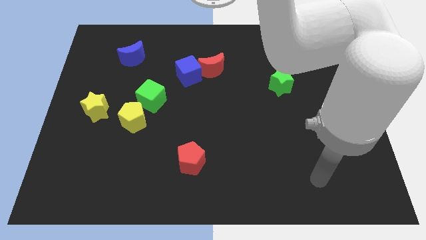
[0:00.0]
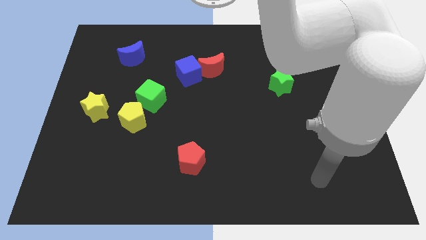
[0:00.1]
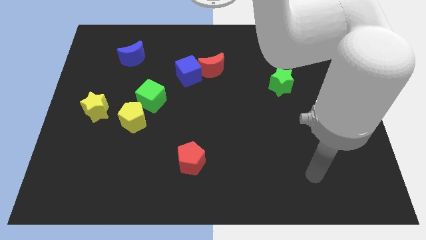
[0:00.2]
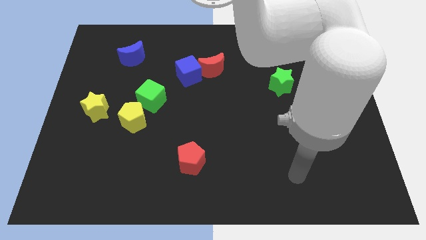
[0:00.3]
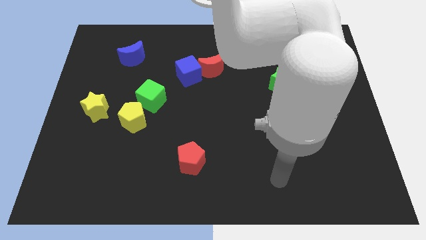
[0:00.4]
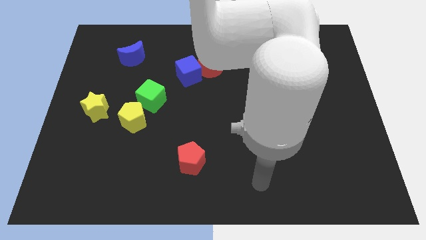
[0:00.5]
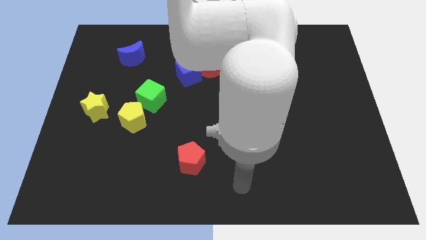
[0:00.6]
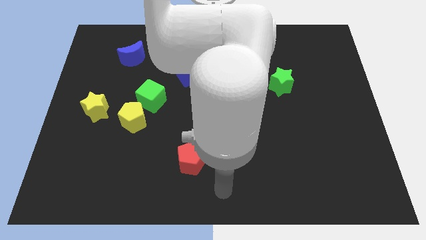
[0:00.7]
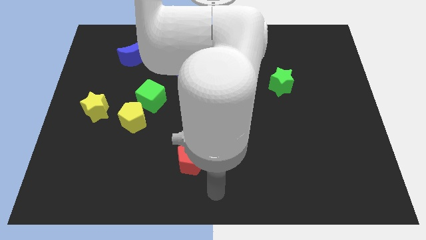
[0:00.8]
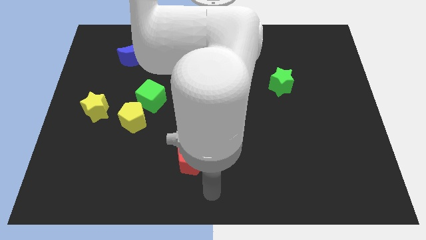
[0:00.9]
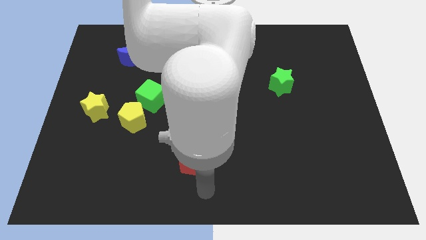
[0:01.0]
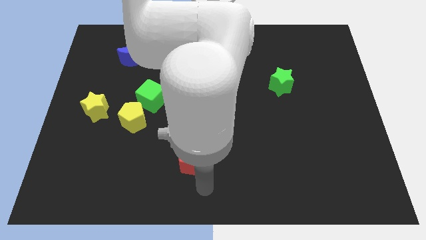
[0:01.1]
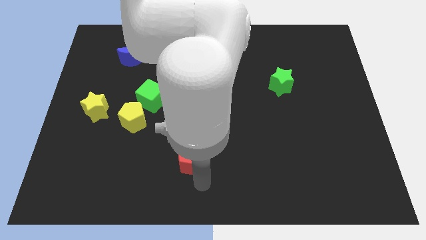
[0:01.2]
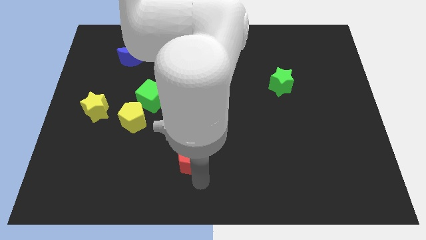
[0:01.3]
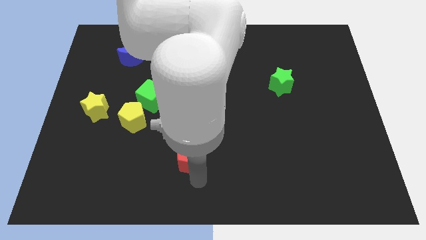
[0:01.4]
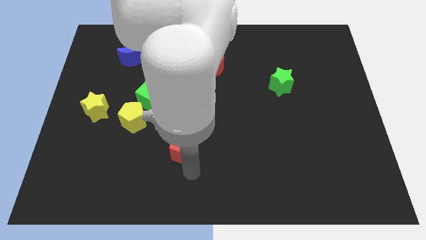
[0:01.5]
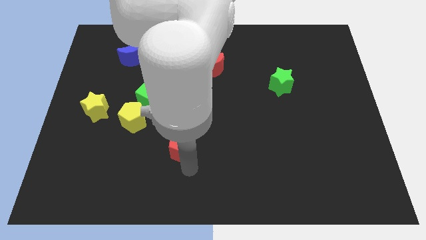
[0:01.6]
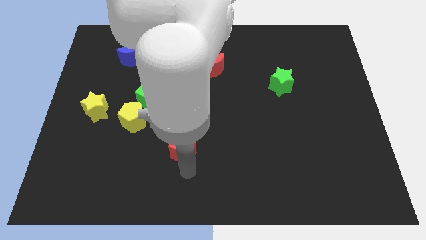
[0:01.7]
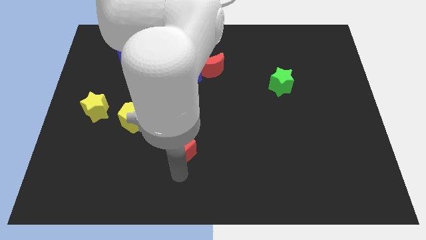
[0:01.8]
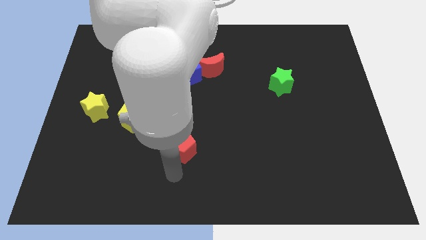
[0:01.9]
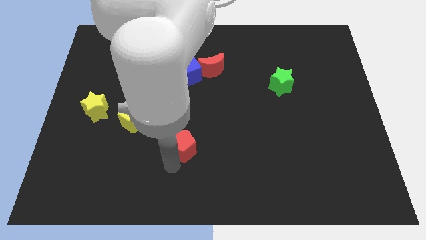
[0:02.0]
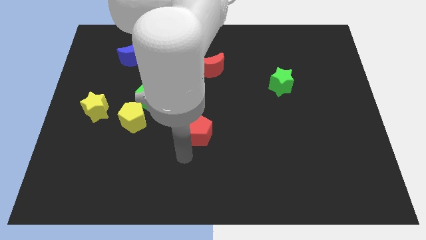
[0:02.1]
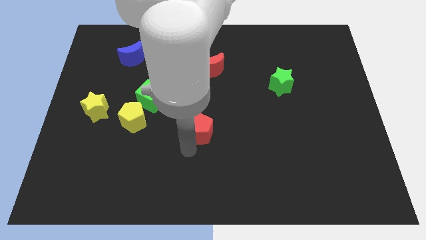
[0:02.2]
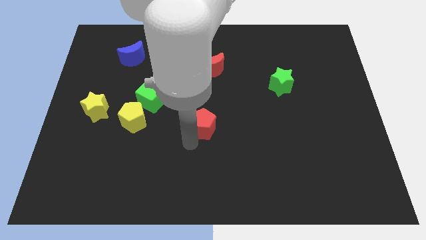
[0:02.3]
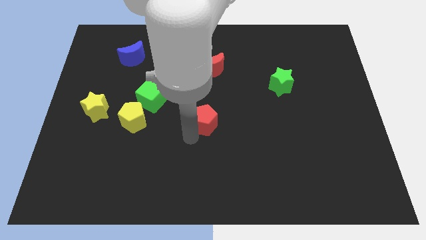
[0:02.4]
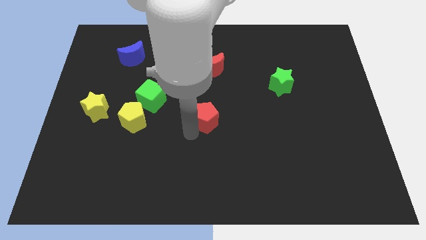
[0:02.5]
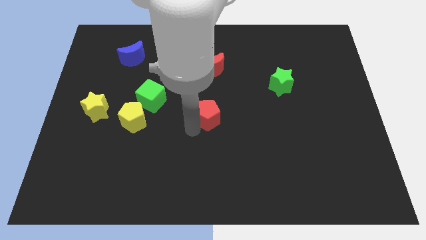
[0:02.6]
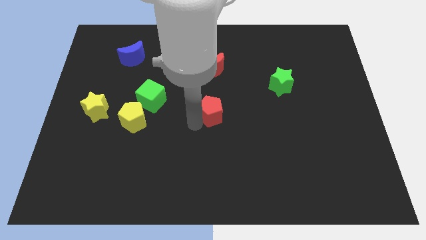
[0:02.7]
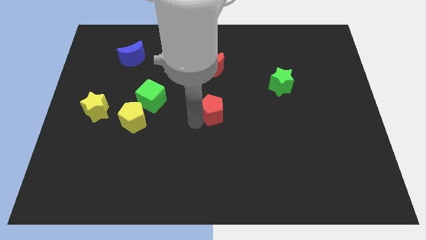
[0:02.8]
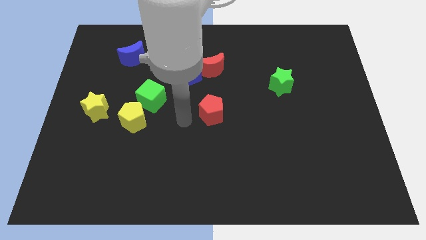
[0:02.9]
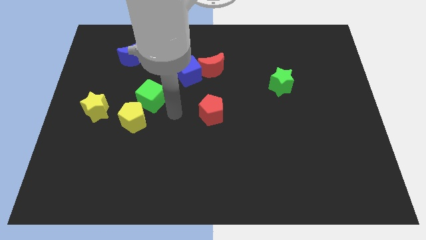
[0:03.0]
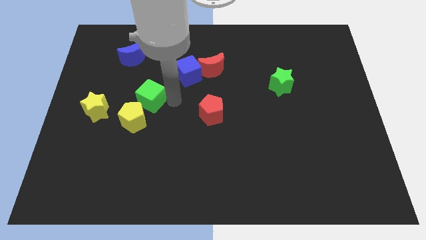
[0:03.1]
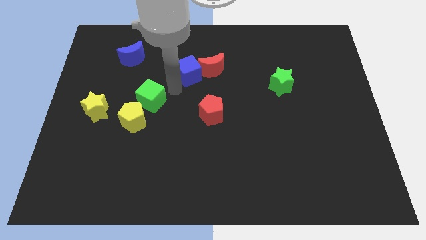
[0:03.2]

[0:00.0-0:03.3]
place the red pentagon below red moon

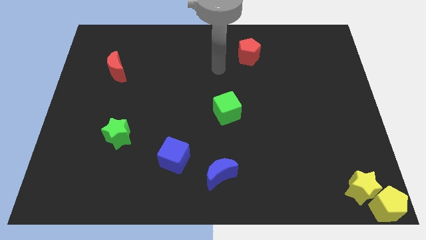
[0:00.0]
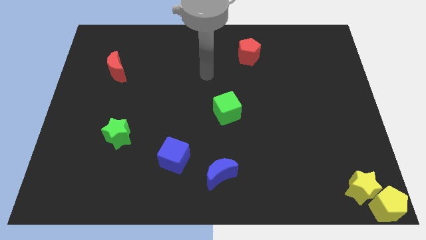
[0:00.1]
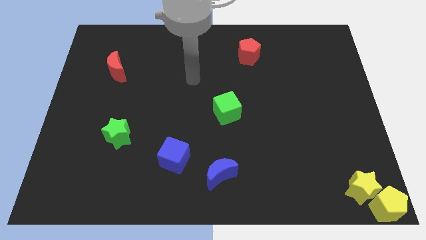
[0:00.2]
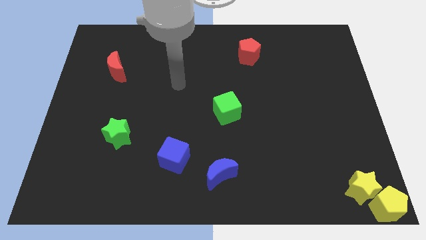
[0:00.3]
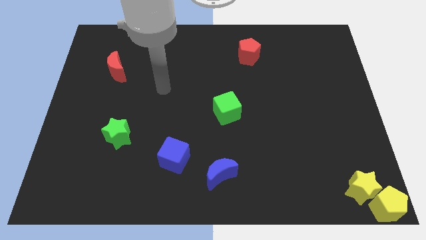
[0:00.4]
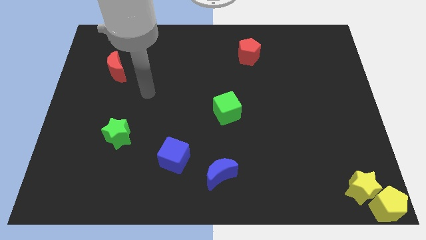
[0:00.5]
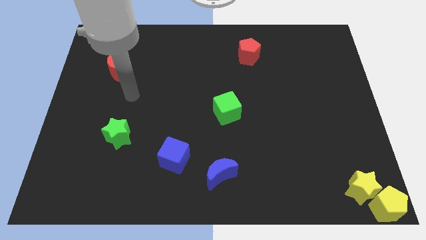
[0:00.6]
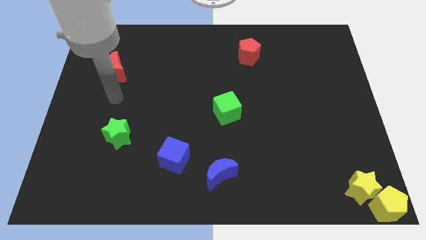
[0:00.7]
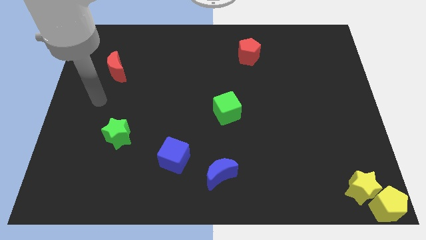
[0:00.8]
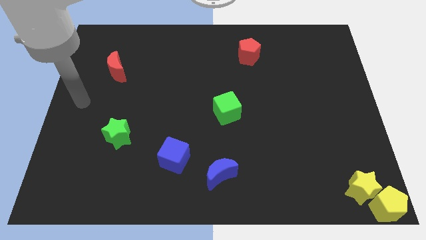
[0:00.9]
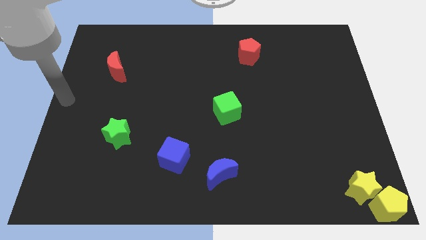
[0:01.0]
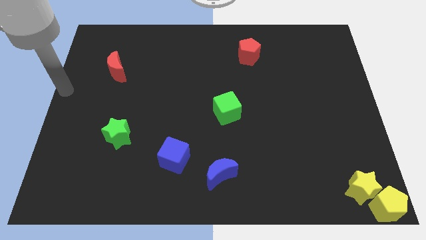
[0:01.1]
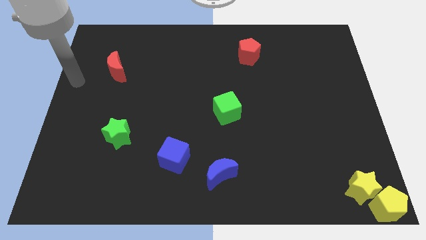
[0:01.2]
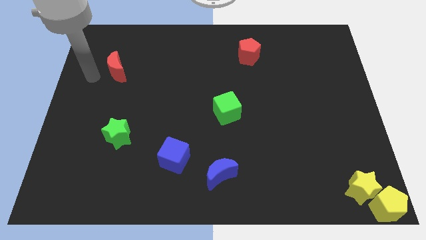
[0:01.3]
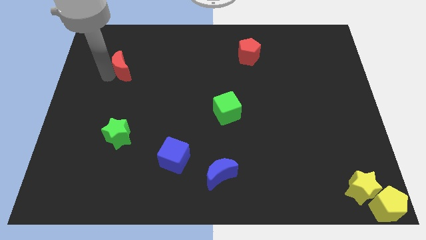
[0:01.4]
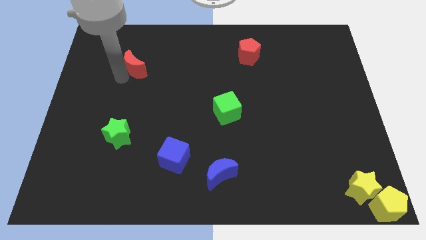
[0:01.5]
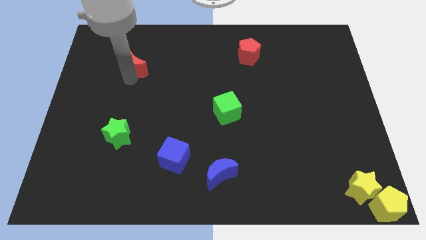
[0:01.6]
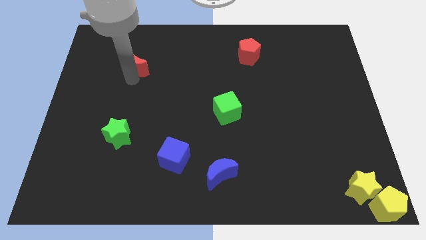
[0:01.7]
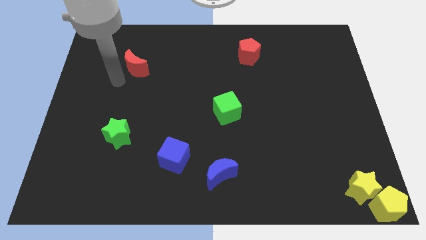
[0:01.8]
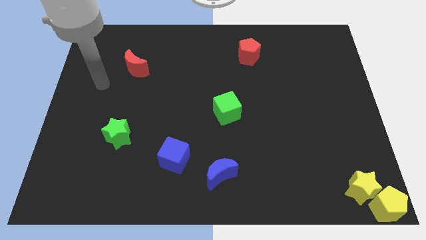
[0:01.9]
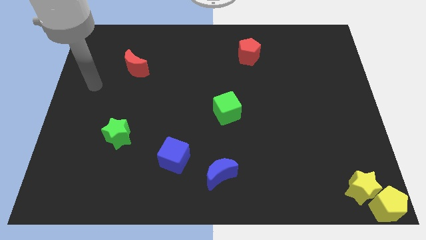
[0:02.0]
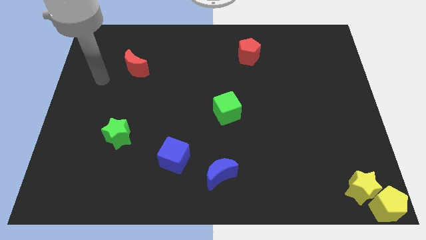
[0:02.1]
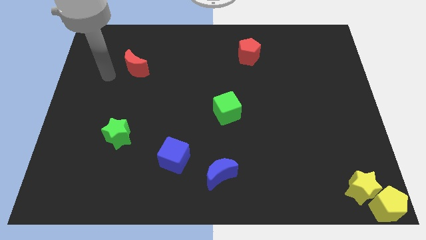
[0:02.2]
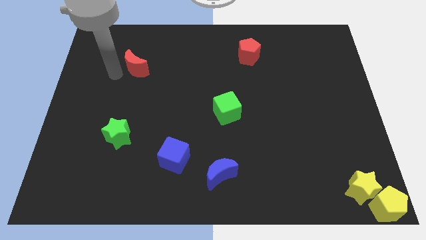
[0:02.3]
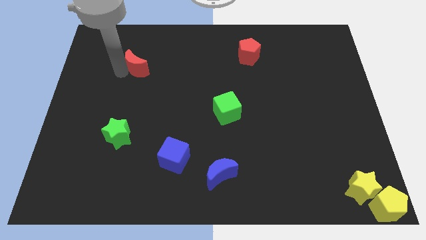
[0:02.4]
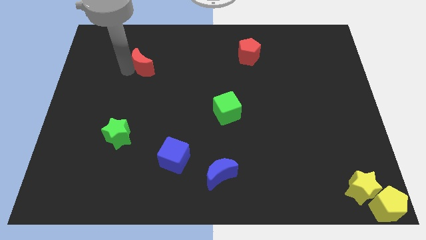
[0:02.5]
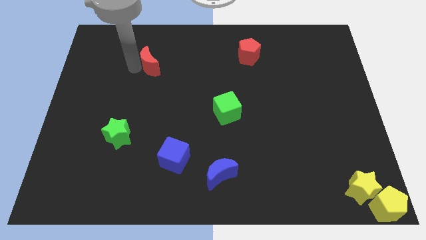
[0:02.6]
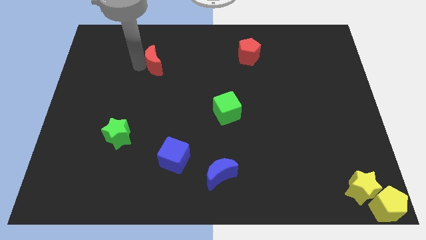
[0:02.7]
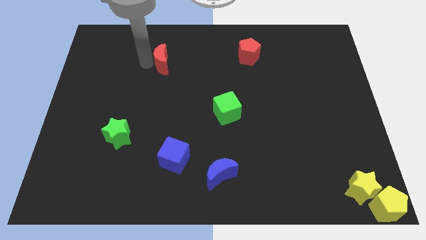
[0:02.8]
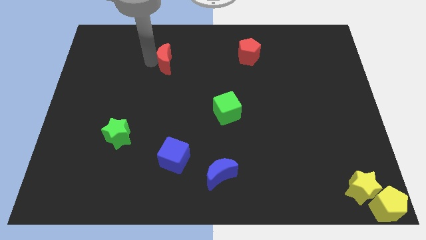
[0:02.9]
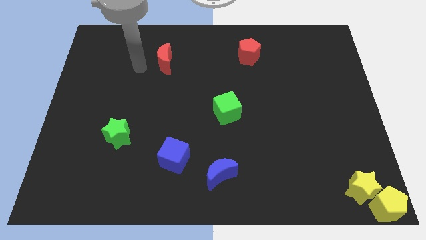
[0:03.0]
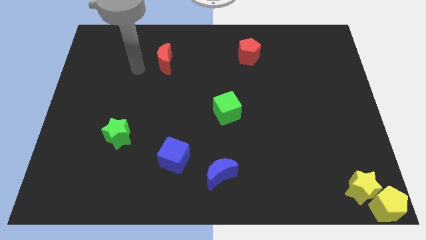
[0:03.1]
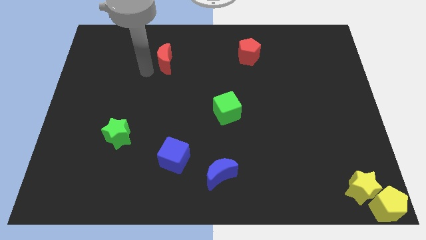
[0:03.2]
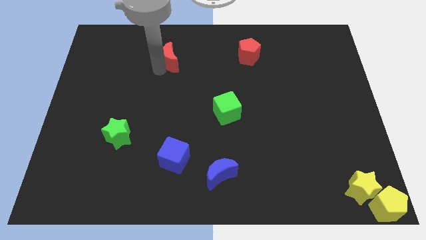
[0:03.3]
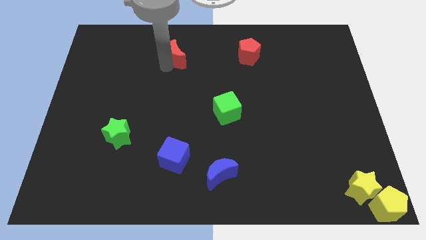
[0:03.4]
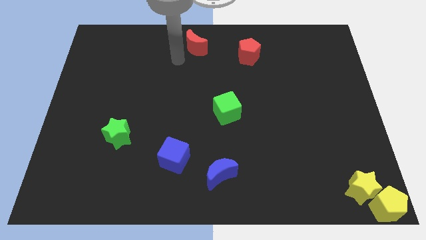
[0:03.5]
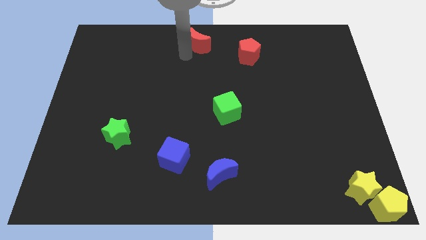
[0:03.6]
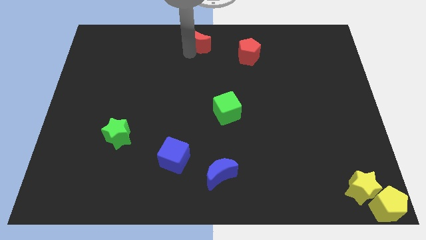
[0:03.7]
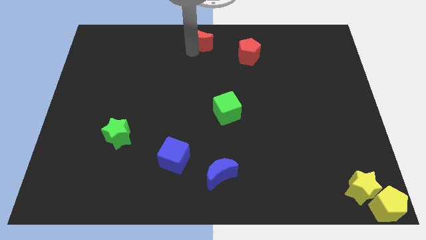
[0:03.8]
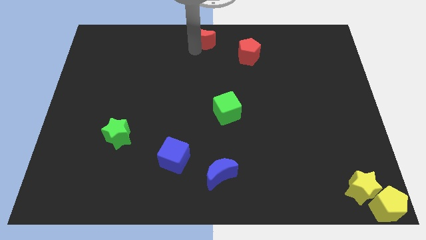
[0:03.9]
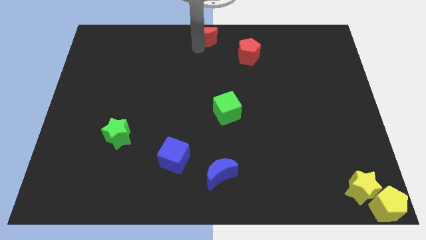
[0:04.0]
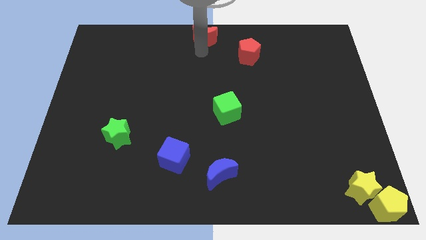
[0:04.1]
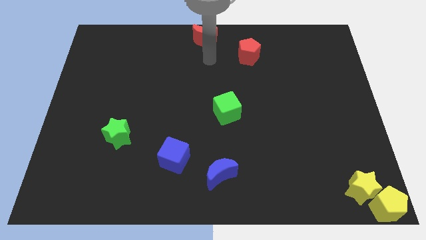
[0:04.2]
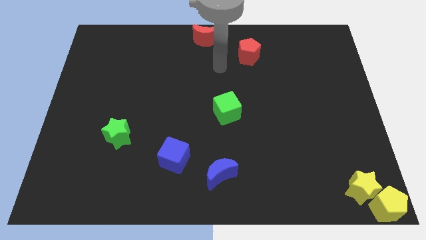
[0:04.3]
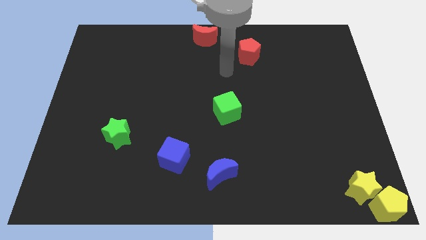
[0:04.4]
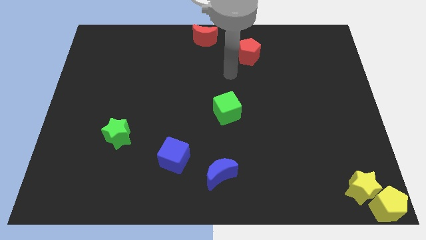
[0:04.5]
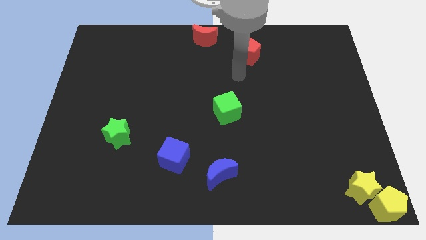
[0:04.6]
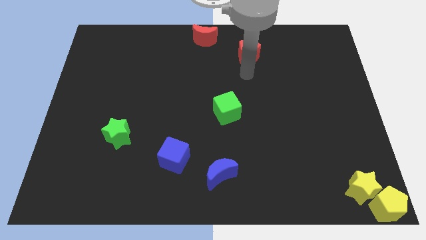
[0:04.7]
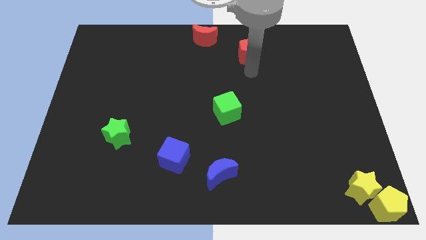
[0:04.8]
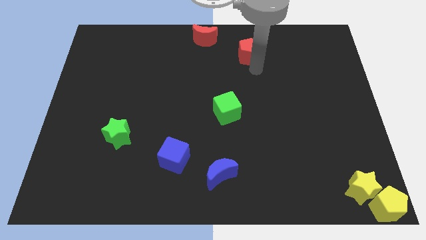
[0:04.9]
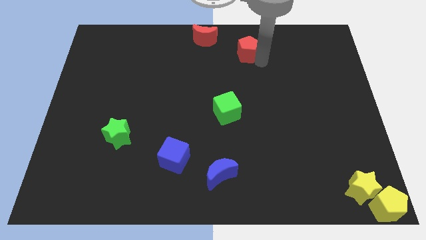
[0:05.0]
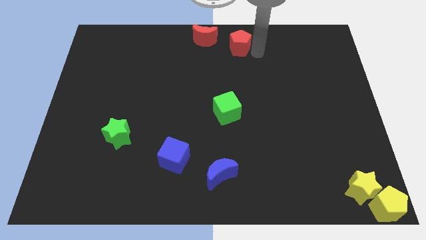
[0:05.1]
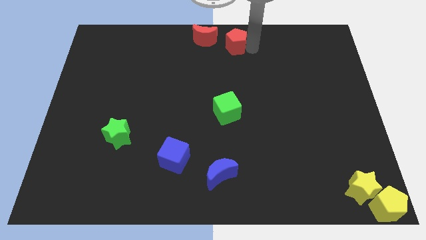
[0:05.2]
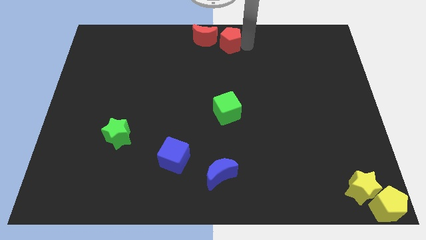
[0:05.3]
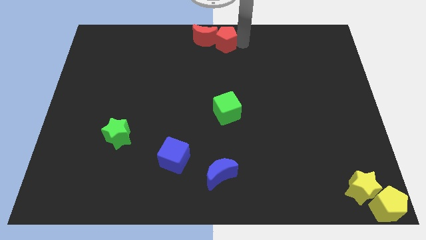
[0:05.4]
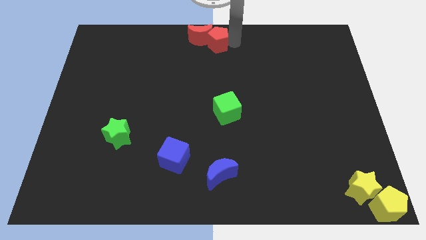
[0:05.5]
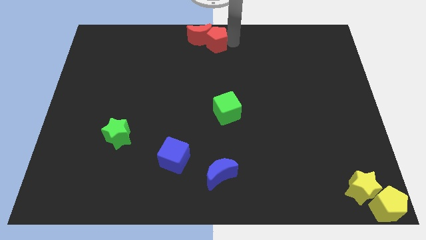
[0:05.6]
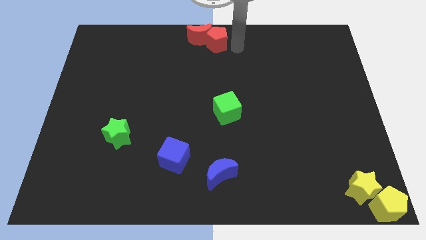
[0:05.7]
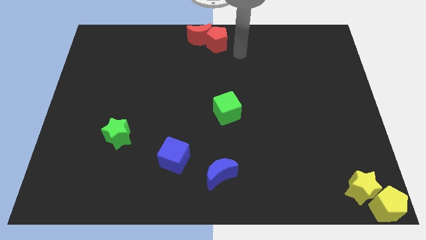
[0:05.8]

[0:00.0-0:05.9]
move the red blocks to the top center
